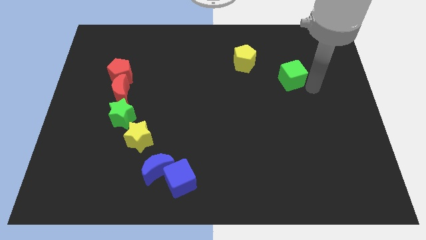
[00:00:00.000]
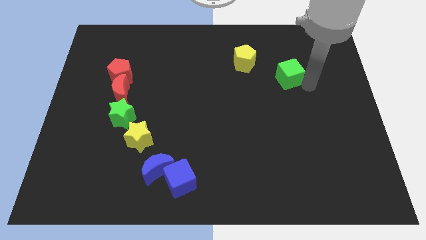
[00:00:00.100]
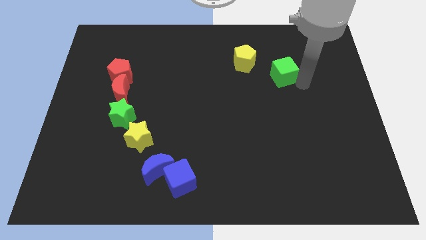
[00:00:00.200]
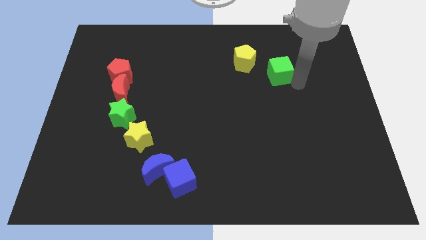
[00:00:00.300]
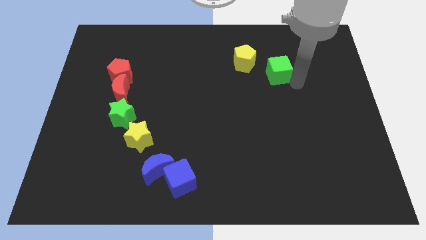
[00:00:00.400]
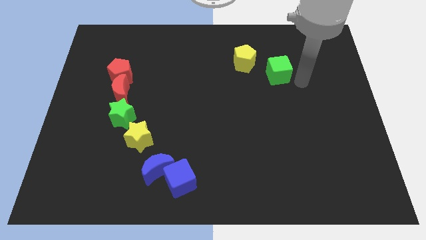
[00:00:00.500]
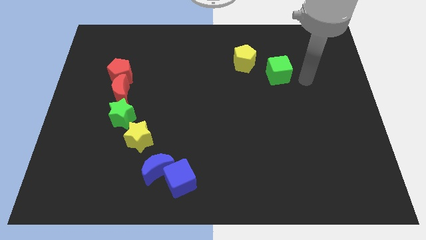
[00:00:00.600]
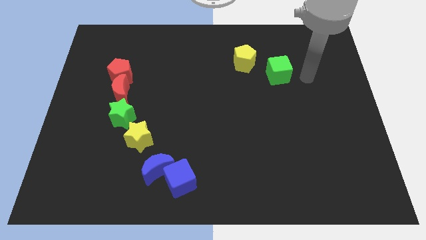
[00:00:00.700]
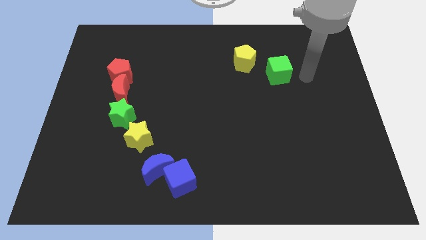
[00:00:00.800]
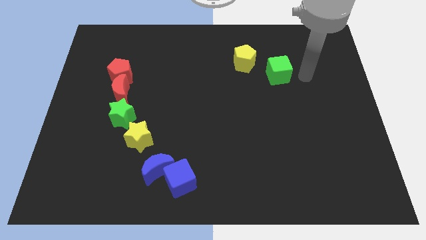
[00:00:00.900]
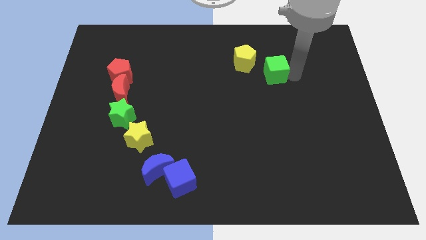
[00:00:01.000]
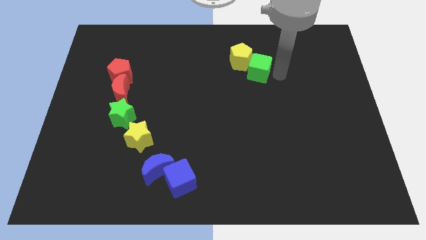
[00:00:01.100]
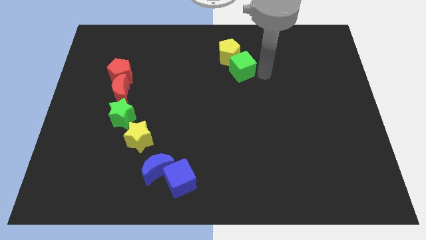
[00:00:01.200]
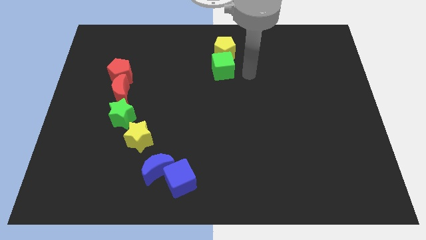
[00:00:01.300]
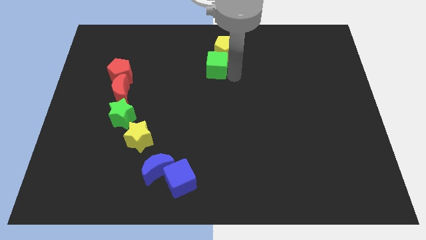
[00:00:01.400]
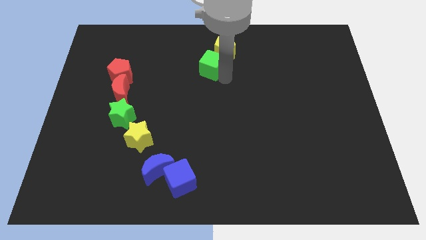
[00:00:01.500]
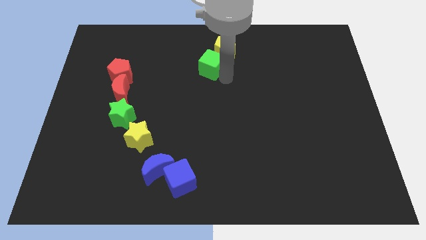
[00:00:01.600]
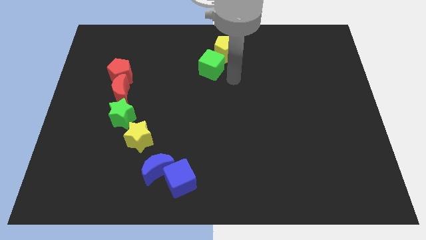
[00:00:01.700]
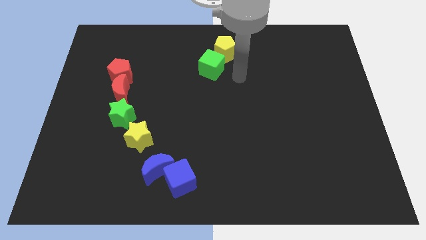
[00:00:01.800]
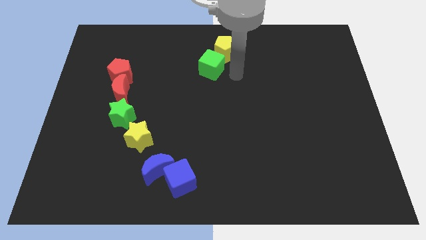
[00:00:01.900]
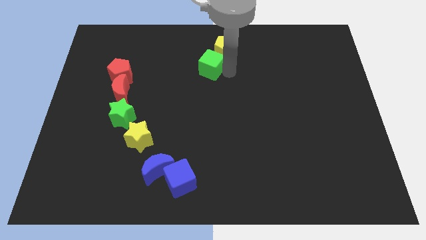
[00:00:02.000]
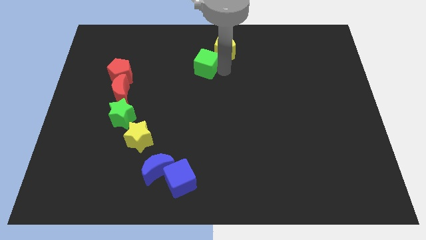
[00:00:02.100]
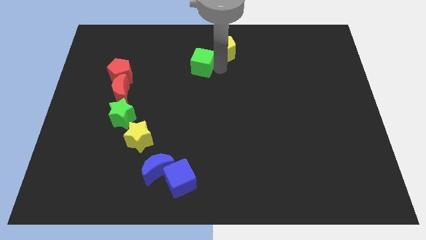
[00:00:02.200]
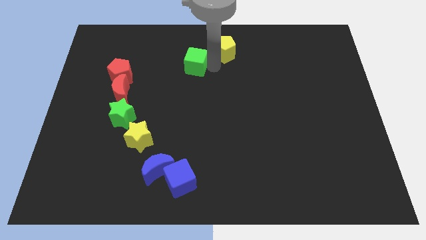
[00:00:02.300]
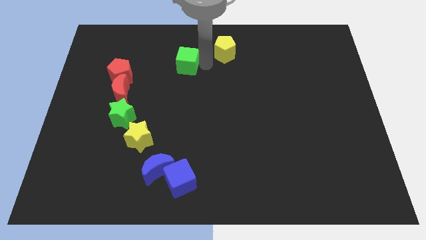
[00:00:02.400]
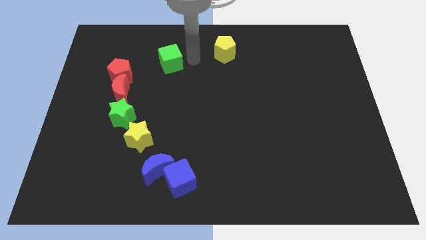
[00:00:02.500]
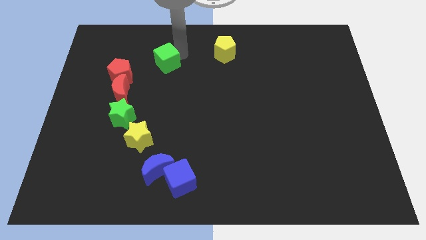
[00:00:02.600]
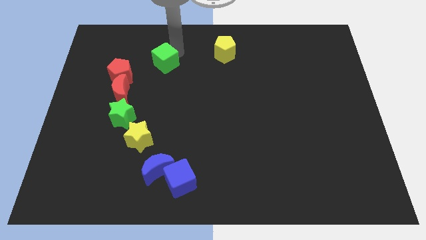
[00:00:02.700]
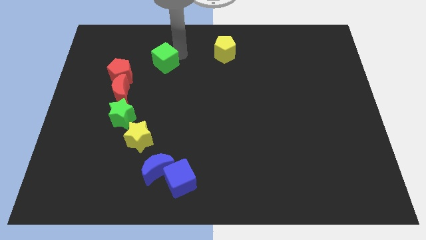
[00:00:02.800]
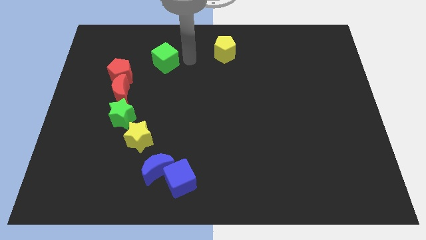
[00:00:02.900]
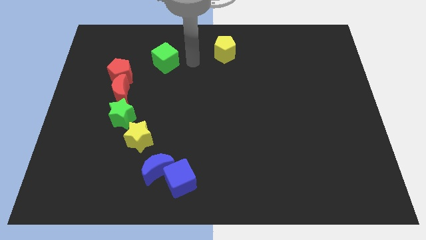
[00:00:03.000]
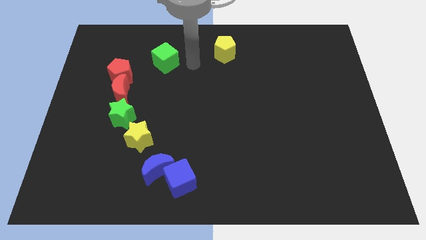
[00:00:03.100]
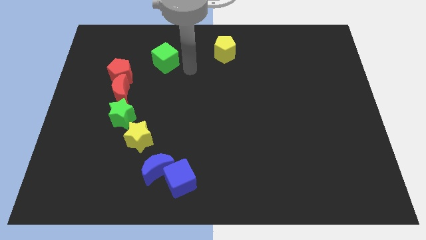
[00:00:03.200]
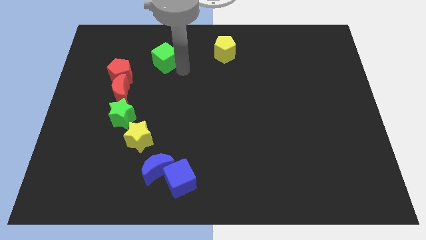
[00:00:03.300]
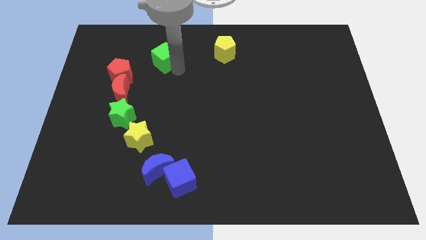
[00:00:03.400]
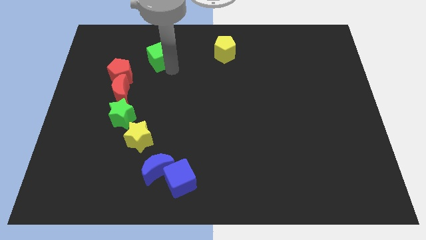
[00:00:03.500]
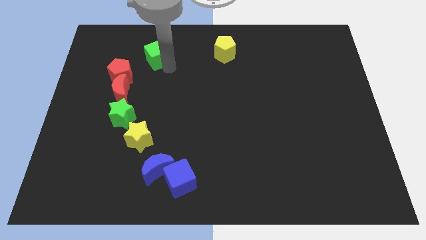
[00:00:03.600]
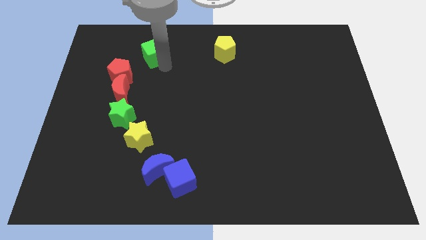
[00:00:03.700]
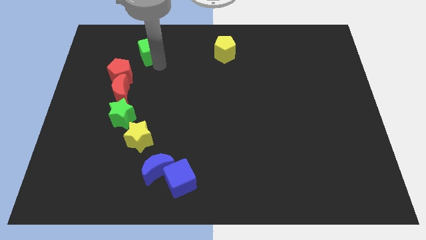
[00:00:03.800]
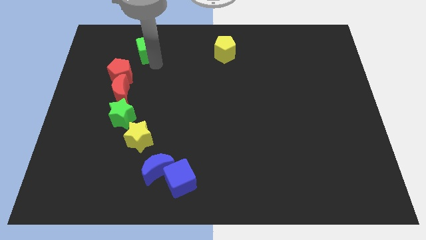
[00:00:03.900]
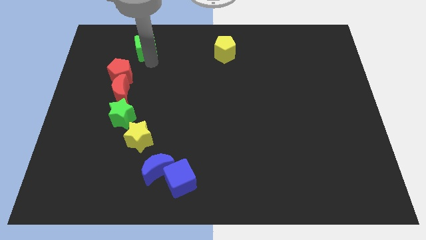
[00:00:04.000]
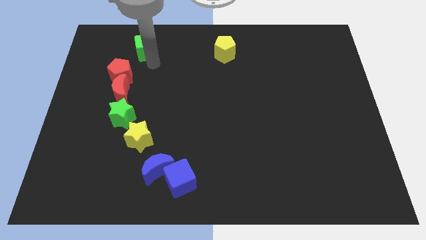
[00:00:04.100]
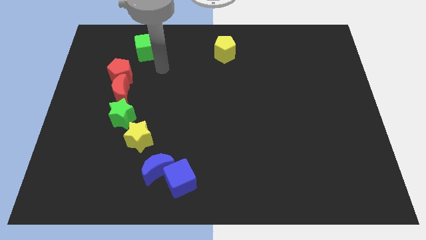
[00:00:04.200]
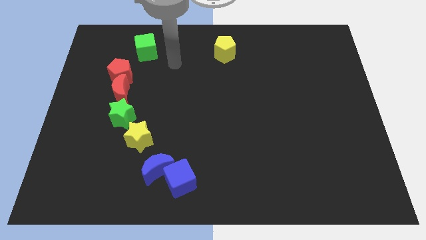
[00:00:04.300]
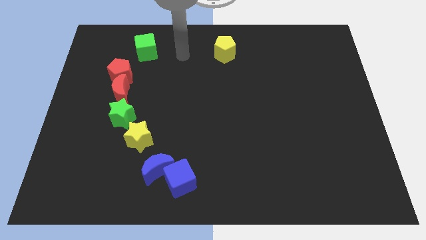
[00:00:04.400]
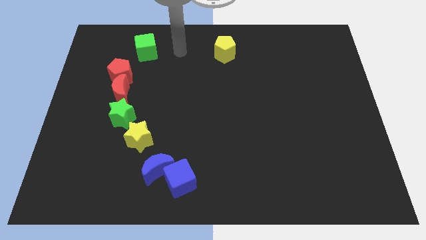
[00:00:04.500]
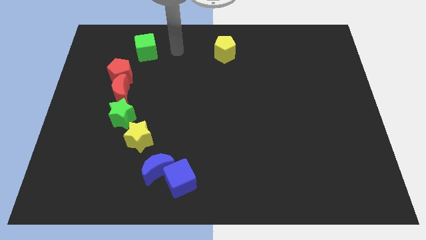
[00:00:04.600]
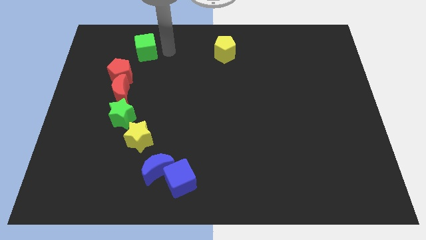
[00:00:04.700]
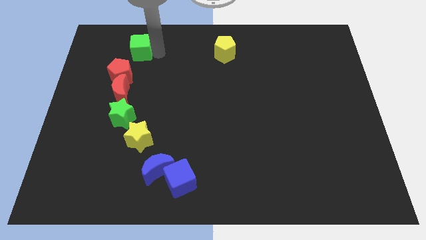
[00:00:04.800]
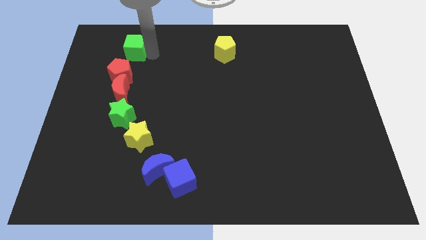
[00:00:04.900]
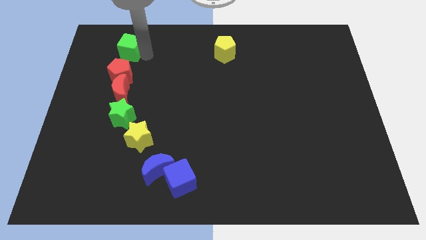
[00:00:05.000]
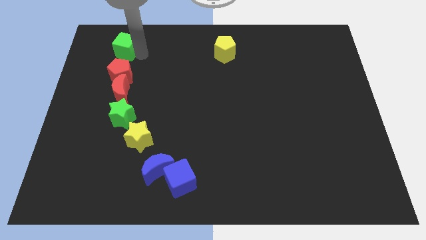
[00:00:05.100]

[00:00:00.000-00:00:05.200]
move the green cube vertically top of the red pentagon

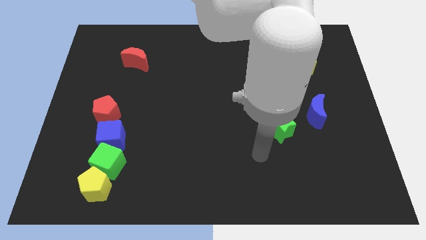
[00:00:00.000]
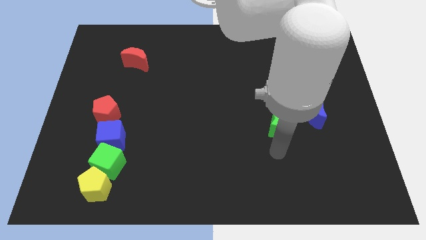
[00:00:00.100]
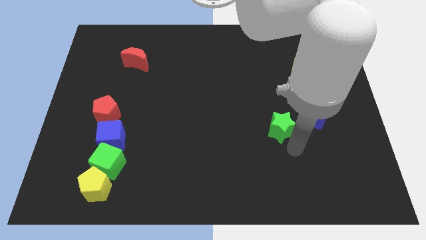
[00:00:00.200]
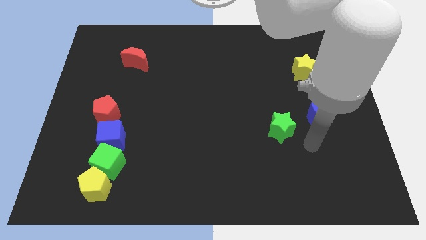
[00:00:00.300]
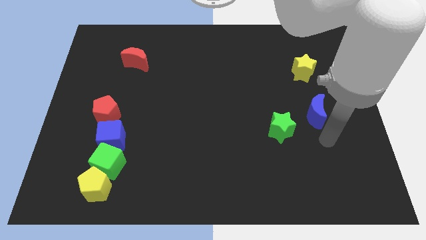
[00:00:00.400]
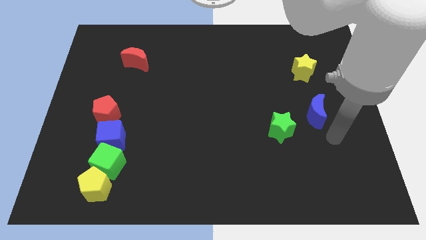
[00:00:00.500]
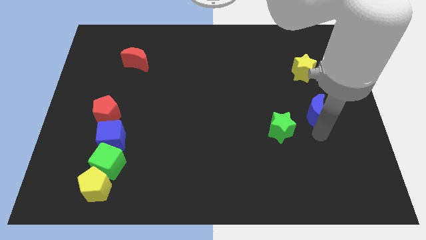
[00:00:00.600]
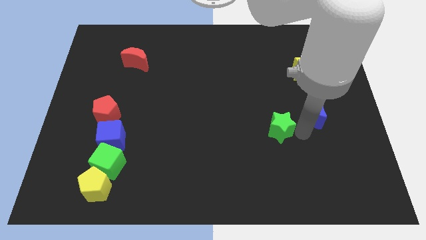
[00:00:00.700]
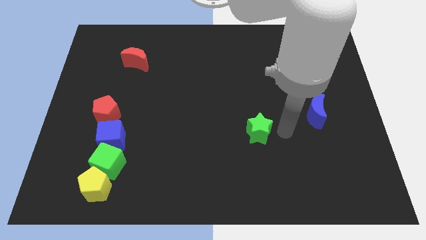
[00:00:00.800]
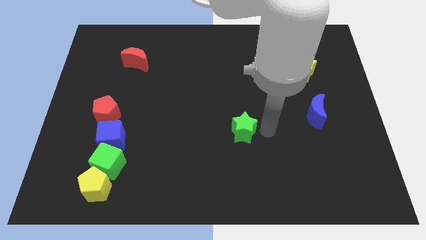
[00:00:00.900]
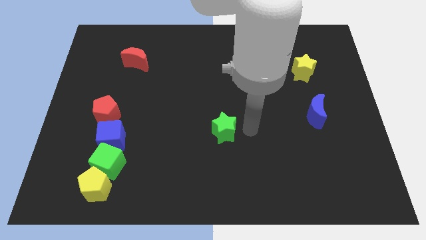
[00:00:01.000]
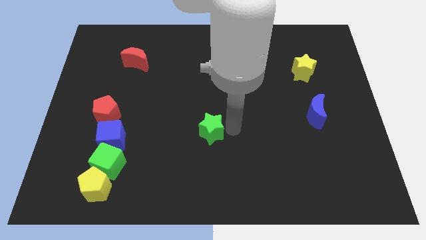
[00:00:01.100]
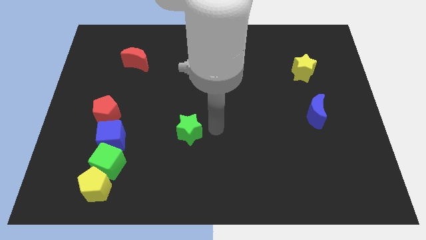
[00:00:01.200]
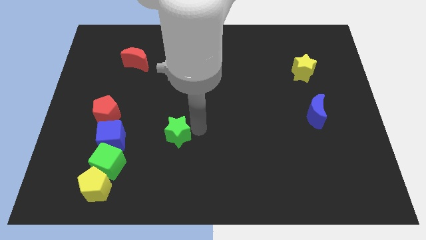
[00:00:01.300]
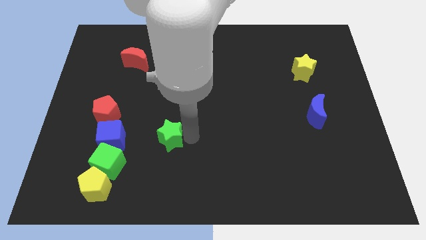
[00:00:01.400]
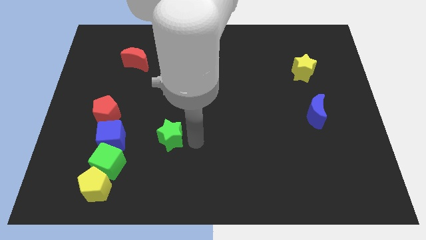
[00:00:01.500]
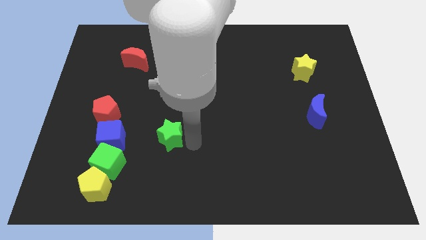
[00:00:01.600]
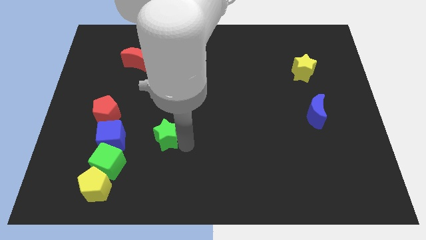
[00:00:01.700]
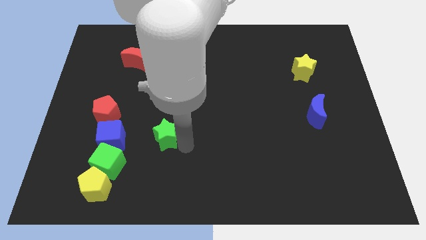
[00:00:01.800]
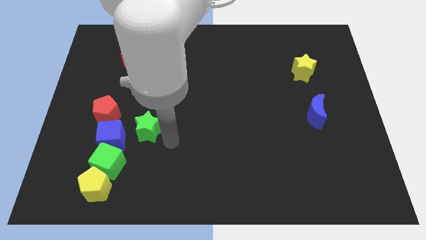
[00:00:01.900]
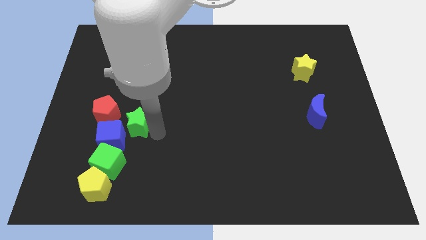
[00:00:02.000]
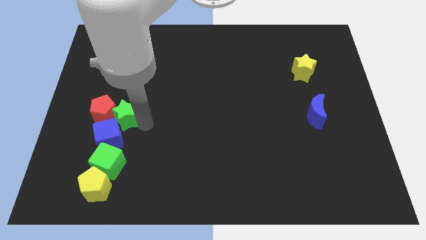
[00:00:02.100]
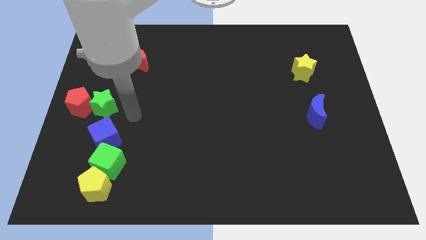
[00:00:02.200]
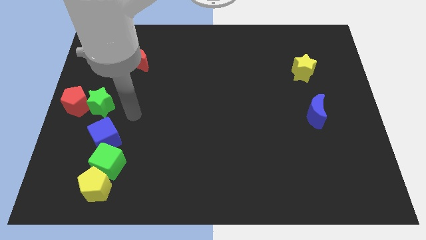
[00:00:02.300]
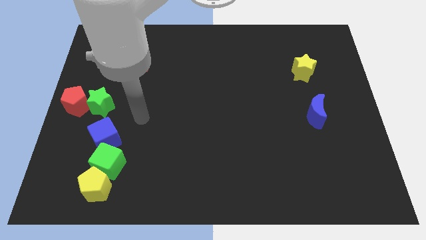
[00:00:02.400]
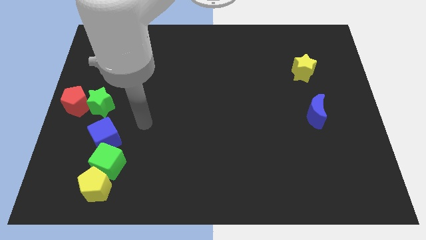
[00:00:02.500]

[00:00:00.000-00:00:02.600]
push green star in to red pentagon

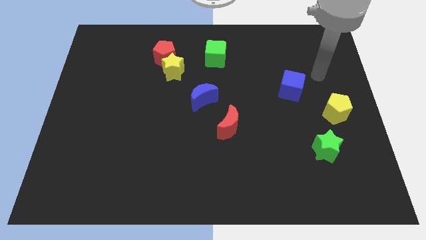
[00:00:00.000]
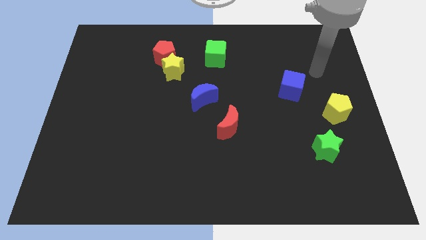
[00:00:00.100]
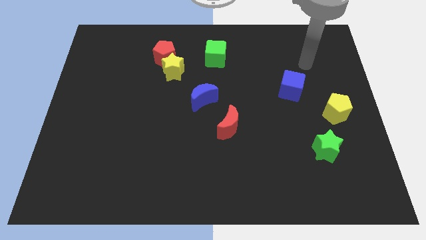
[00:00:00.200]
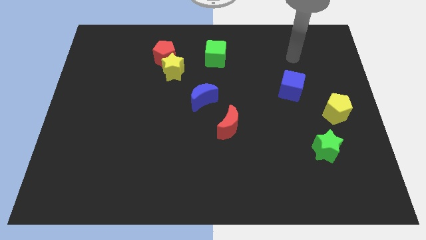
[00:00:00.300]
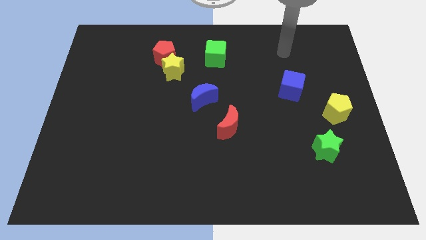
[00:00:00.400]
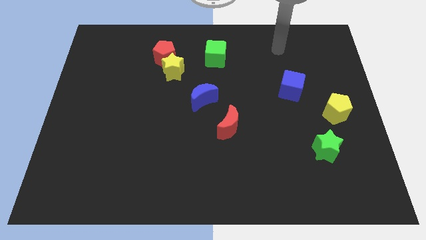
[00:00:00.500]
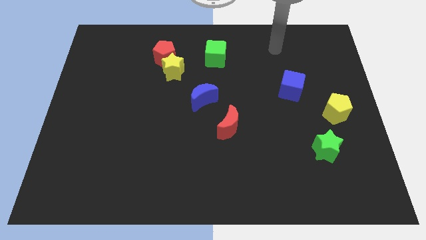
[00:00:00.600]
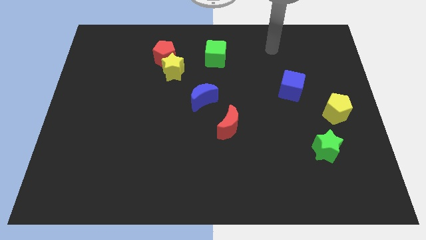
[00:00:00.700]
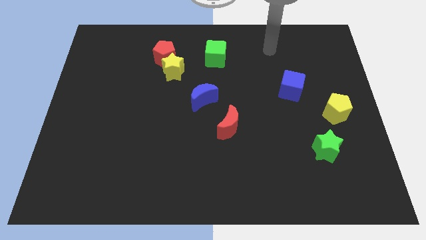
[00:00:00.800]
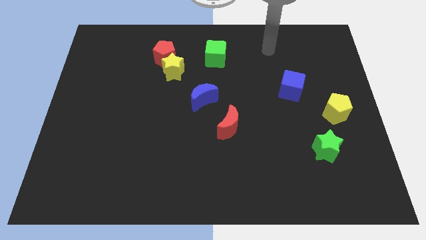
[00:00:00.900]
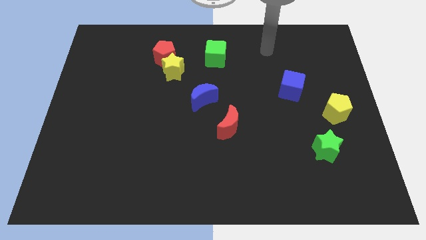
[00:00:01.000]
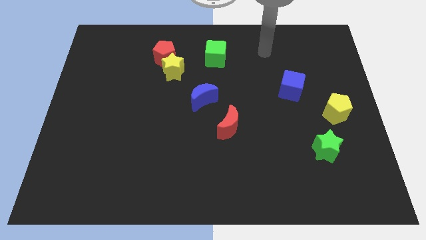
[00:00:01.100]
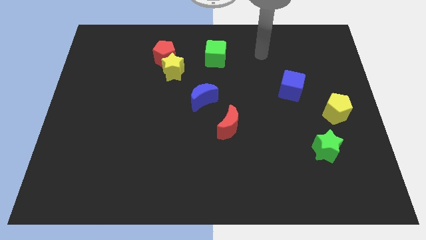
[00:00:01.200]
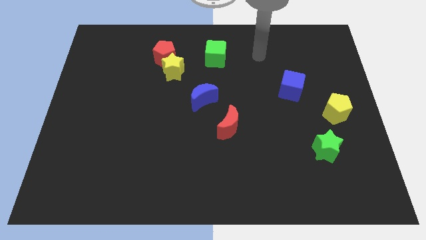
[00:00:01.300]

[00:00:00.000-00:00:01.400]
move your arm to the horizontal right of the green block
